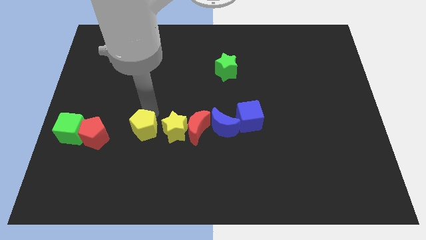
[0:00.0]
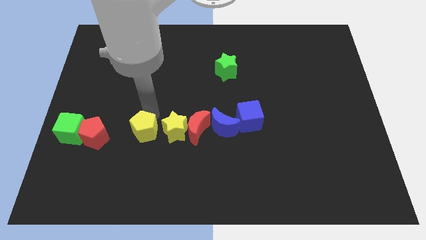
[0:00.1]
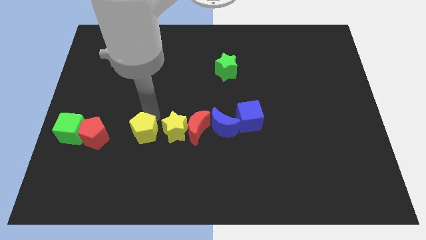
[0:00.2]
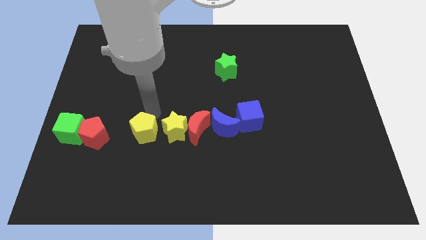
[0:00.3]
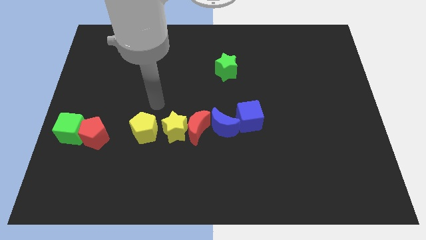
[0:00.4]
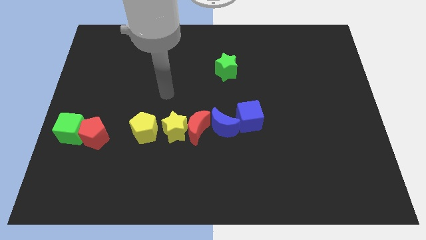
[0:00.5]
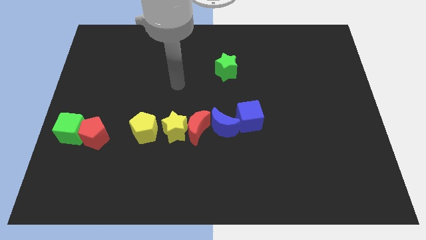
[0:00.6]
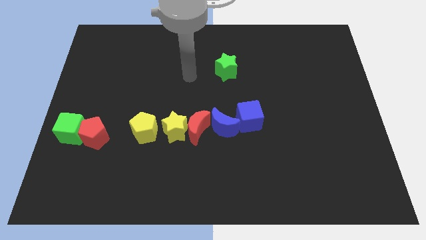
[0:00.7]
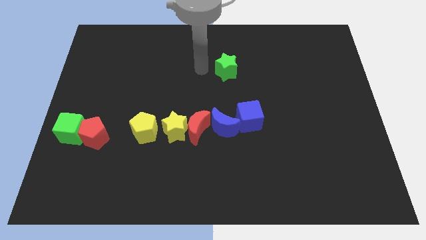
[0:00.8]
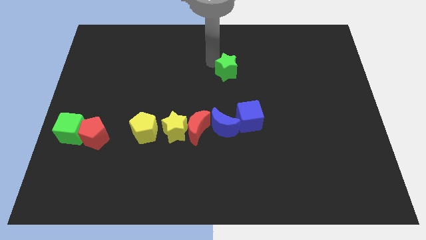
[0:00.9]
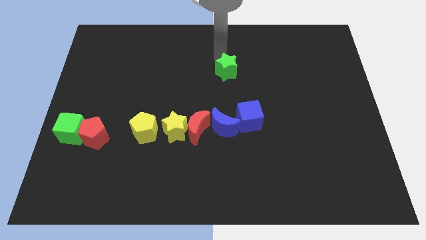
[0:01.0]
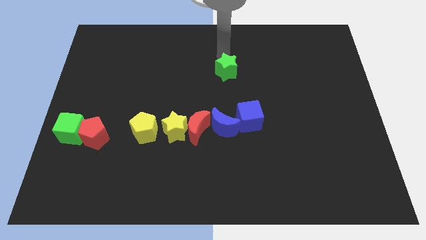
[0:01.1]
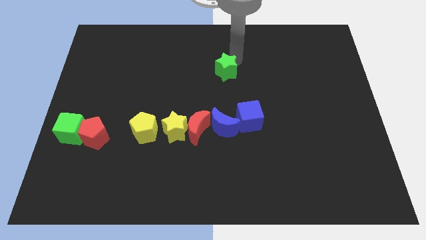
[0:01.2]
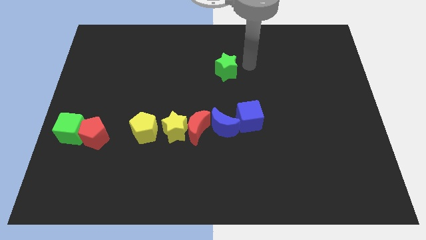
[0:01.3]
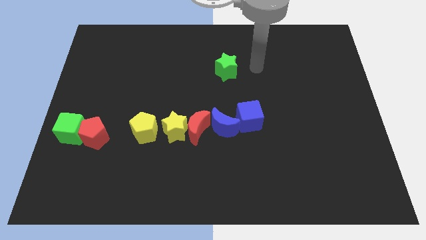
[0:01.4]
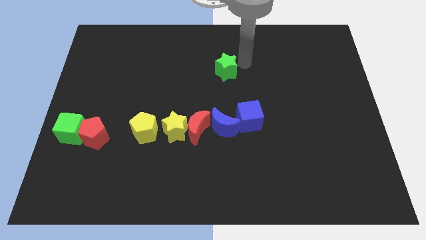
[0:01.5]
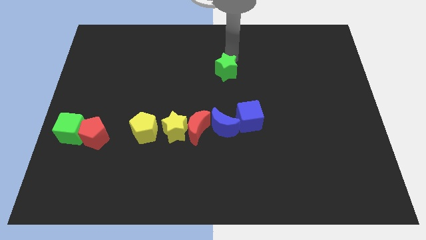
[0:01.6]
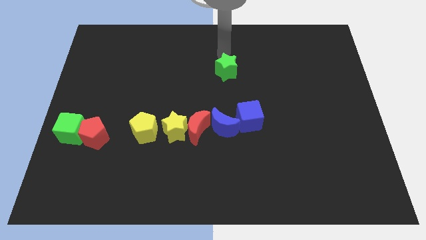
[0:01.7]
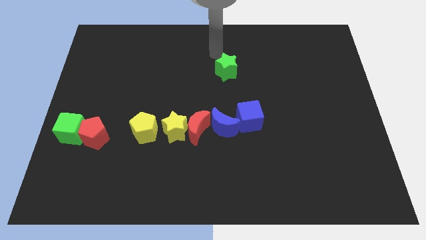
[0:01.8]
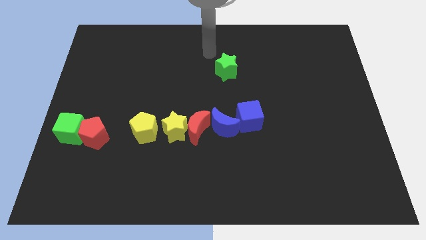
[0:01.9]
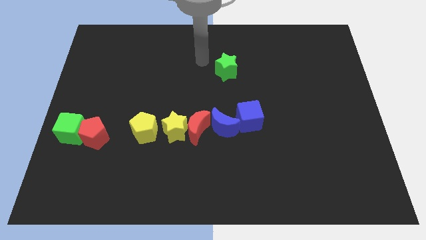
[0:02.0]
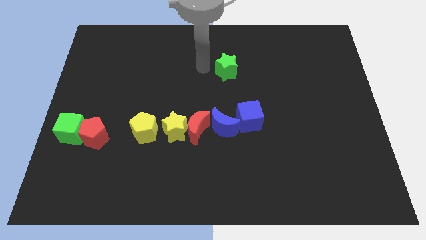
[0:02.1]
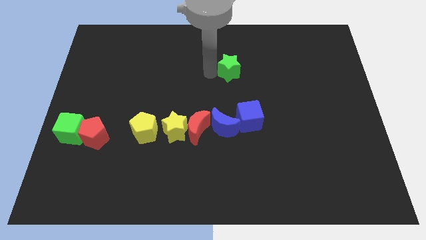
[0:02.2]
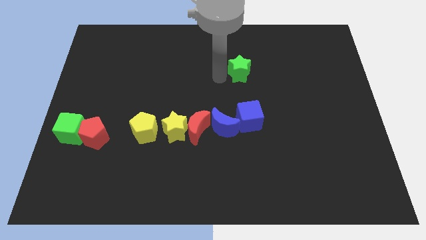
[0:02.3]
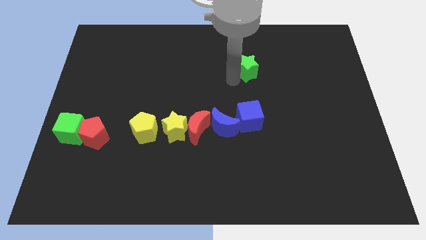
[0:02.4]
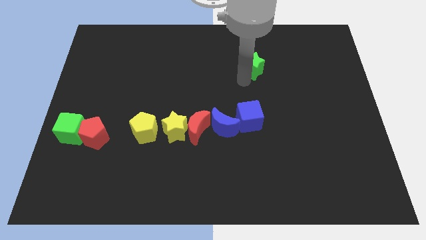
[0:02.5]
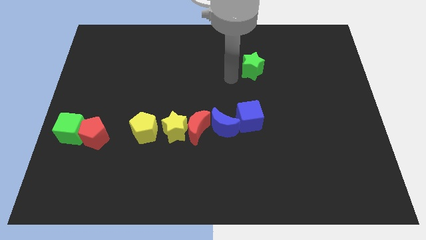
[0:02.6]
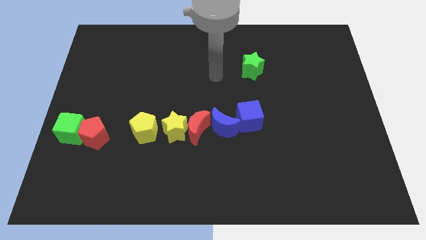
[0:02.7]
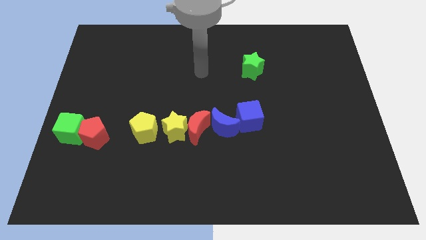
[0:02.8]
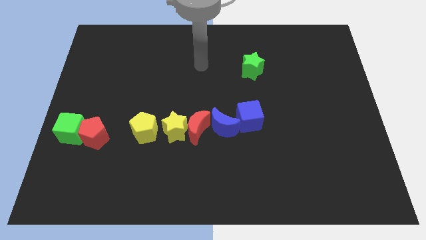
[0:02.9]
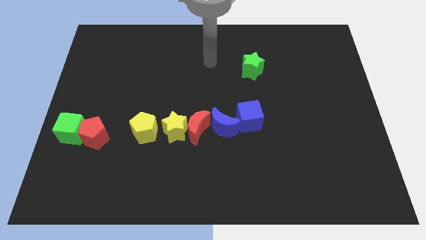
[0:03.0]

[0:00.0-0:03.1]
slightly push the green star towards right

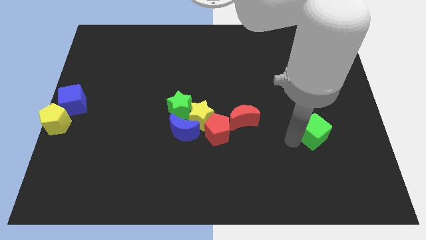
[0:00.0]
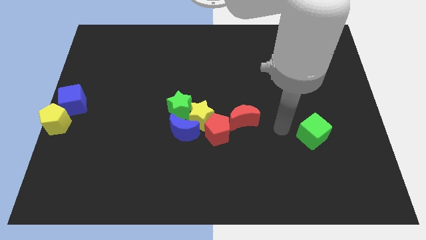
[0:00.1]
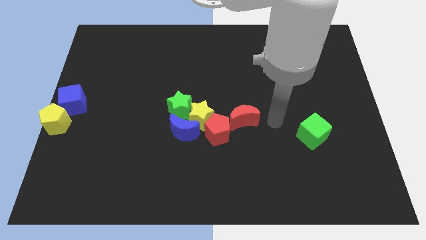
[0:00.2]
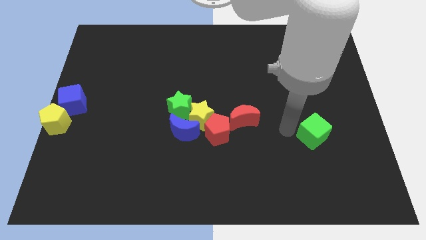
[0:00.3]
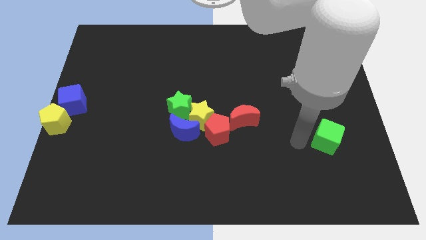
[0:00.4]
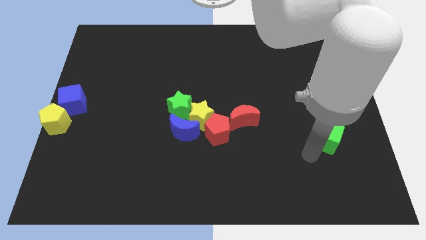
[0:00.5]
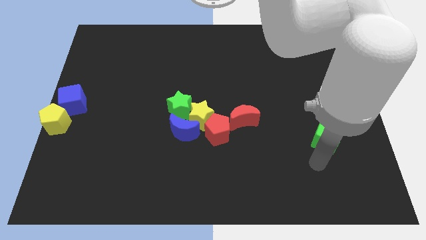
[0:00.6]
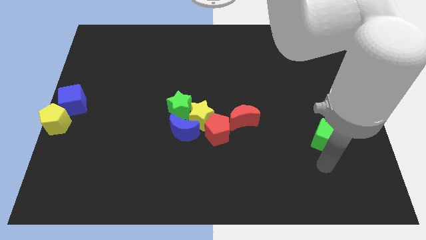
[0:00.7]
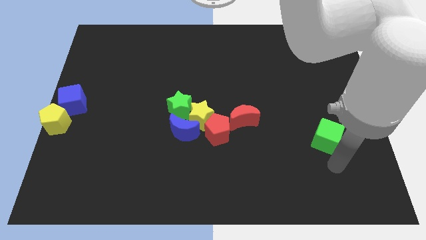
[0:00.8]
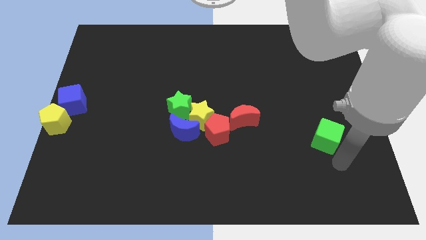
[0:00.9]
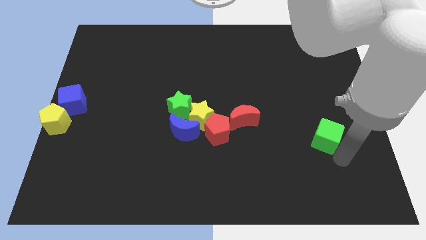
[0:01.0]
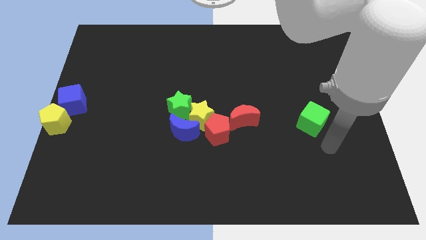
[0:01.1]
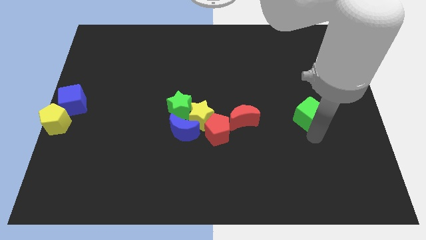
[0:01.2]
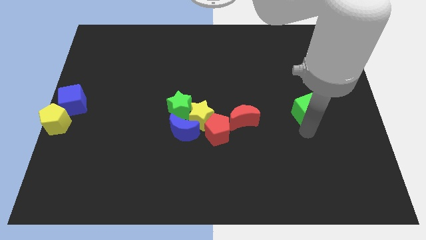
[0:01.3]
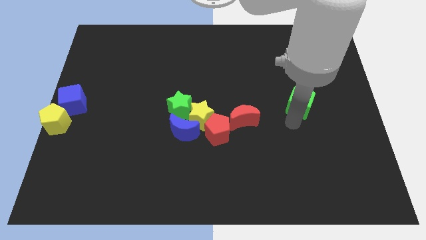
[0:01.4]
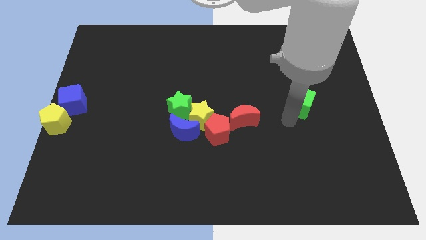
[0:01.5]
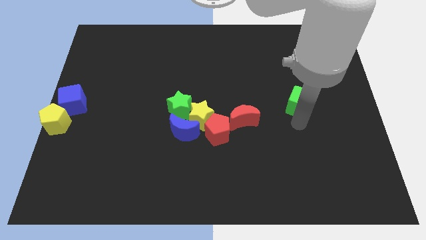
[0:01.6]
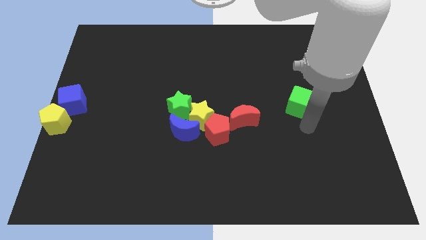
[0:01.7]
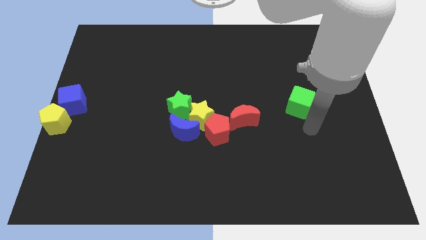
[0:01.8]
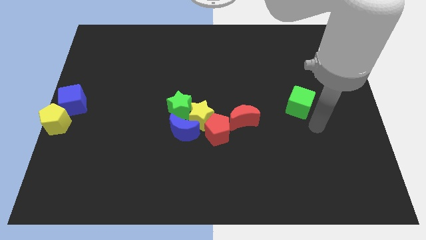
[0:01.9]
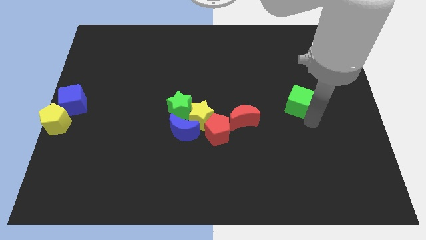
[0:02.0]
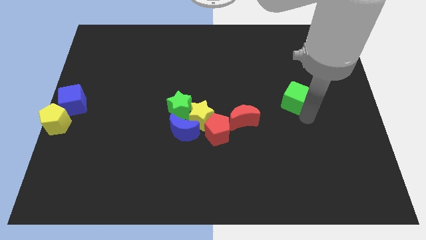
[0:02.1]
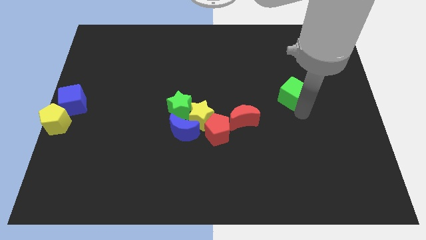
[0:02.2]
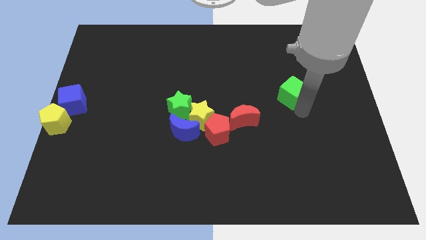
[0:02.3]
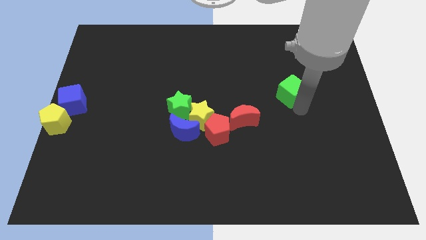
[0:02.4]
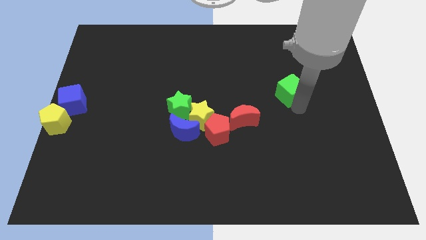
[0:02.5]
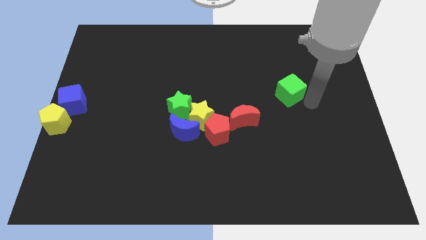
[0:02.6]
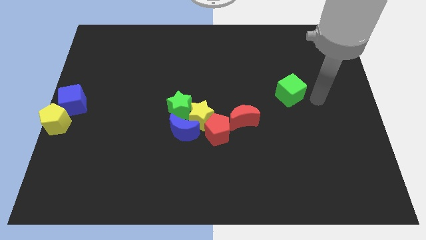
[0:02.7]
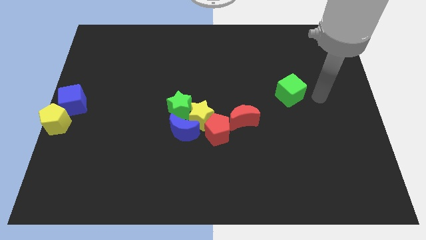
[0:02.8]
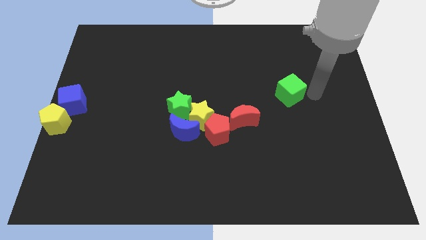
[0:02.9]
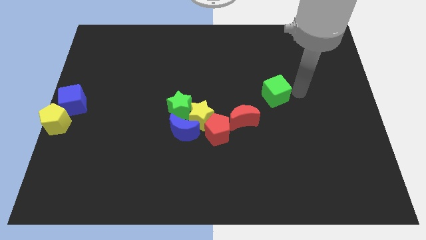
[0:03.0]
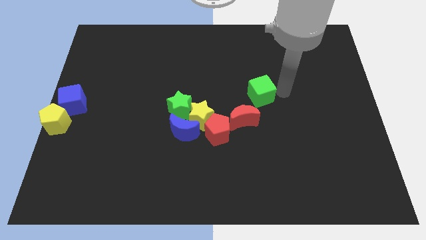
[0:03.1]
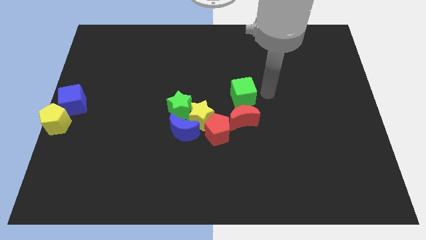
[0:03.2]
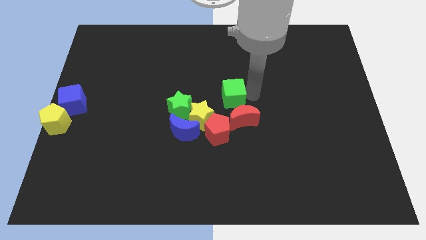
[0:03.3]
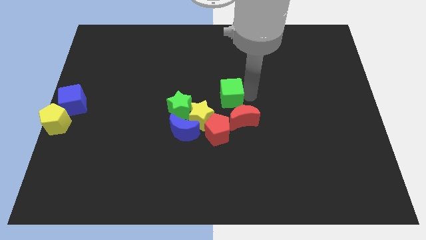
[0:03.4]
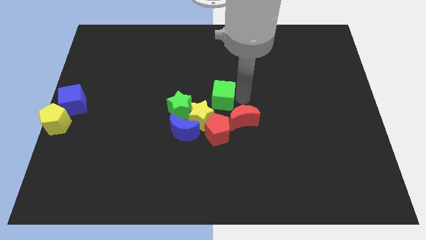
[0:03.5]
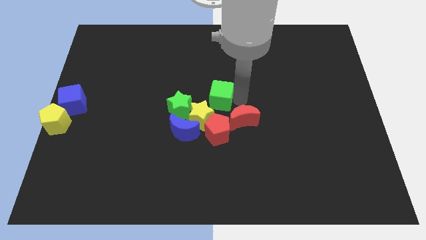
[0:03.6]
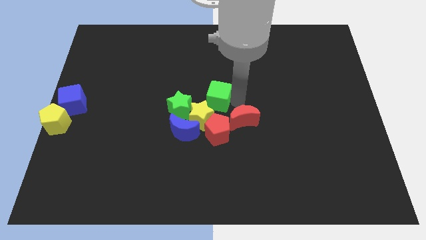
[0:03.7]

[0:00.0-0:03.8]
place the green cube close to the yellow star

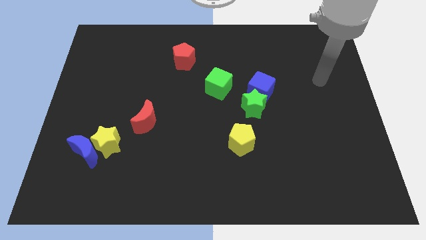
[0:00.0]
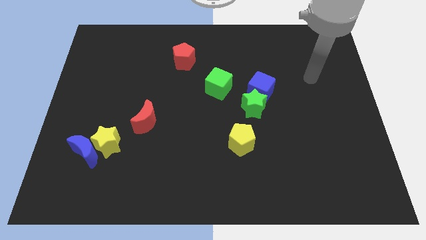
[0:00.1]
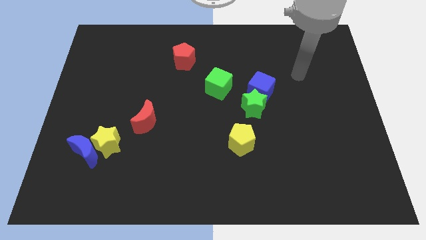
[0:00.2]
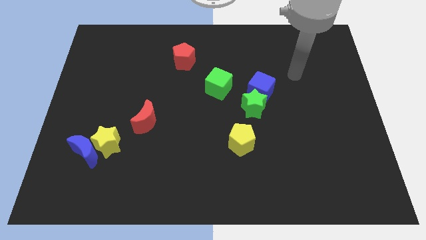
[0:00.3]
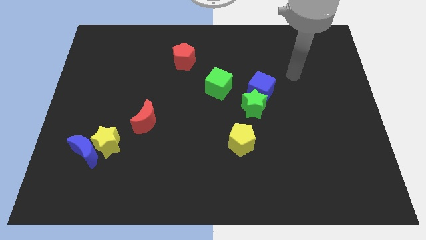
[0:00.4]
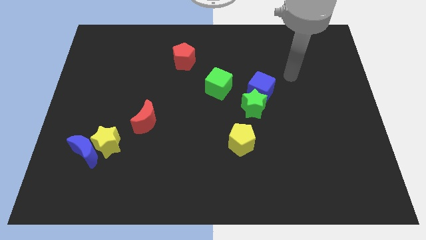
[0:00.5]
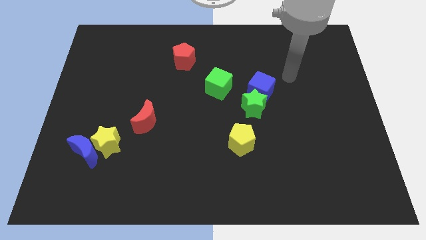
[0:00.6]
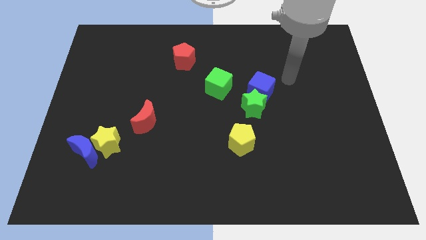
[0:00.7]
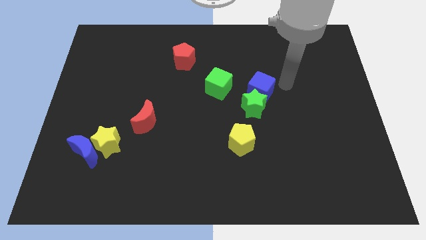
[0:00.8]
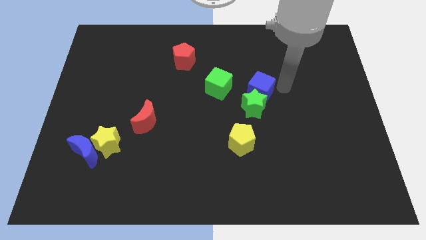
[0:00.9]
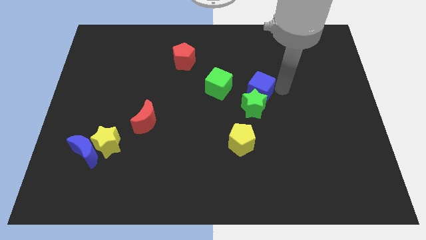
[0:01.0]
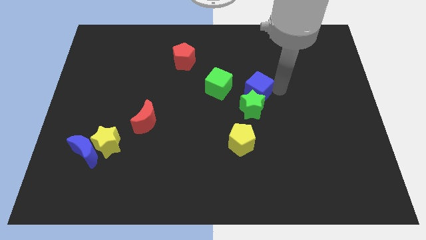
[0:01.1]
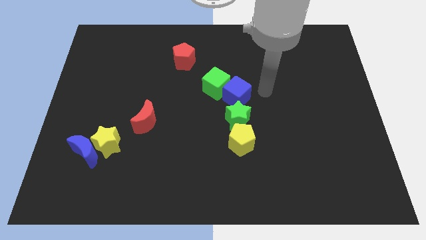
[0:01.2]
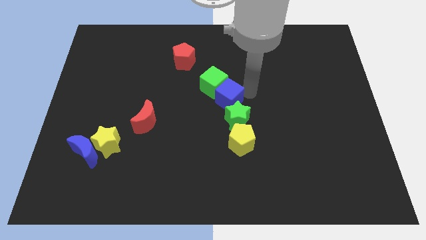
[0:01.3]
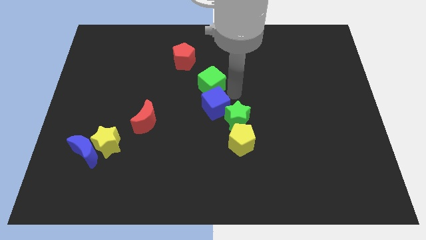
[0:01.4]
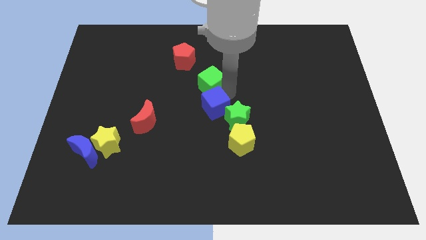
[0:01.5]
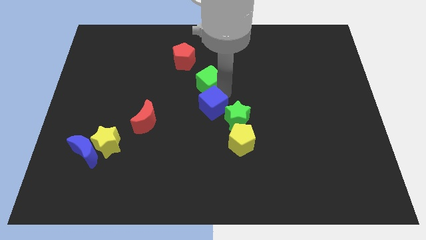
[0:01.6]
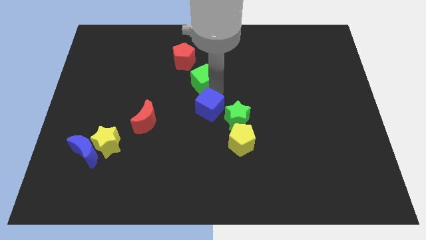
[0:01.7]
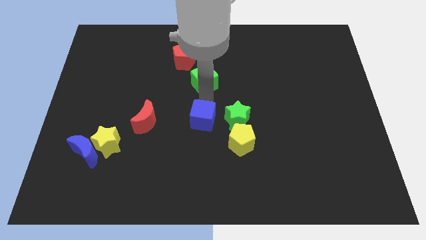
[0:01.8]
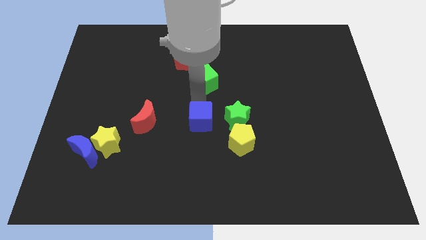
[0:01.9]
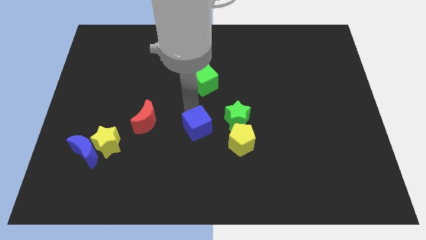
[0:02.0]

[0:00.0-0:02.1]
push the blue cube to the bottom center of the board
